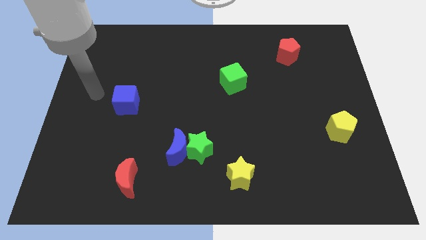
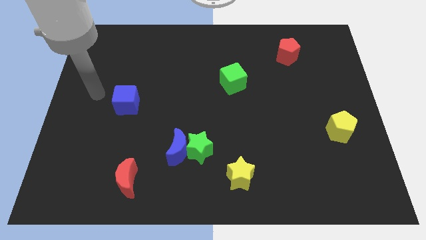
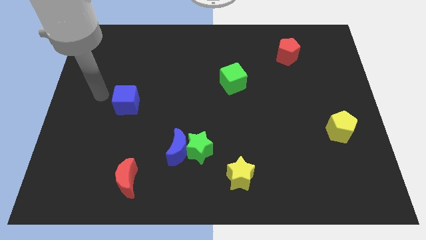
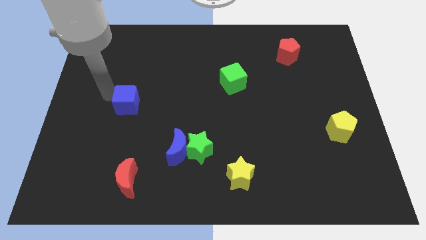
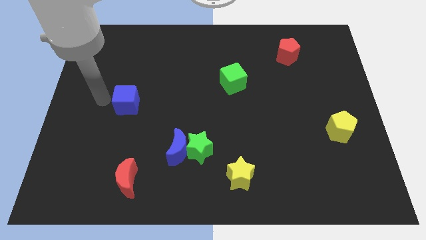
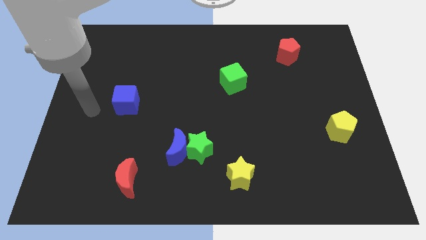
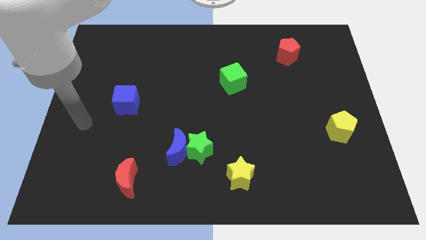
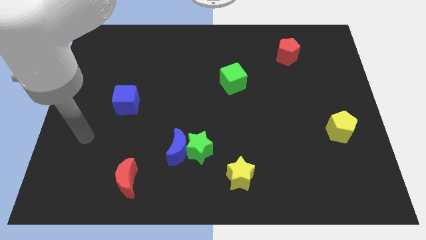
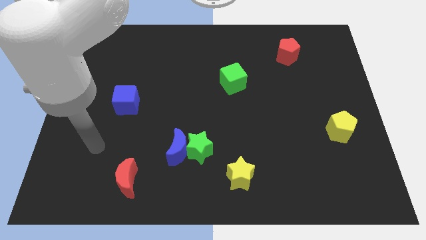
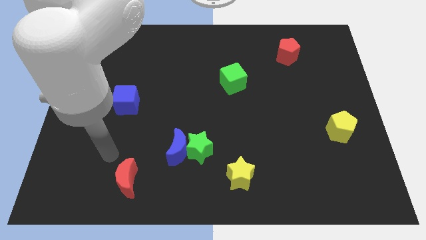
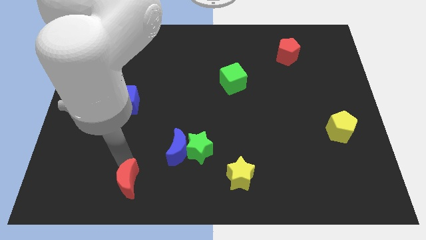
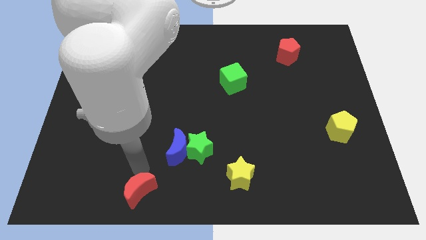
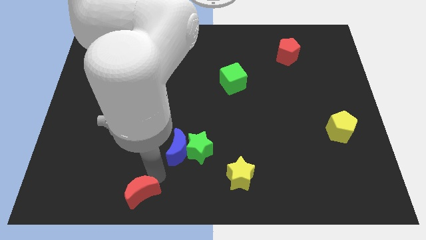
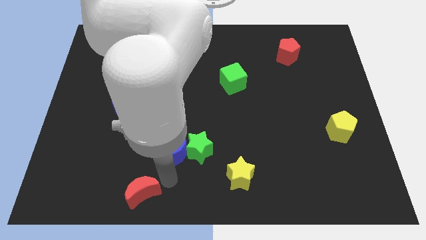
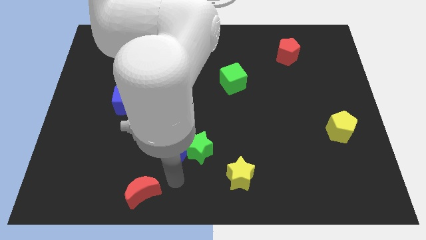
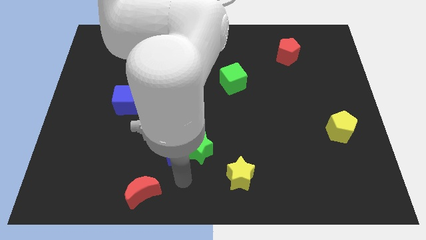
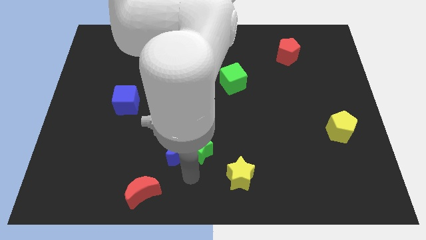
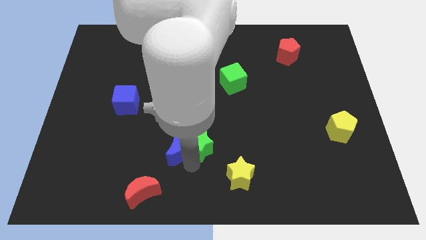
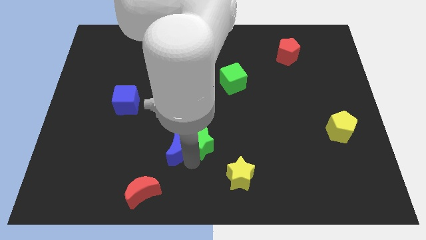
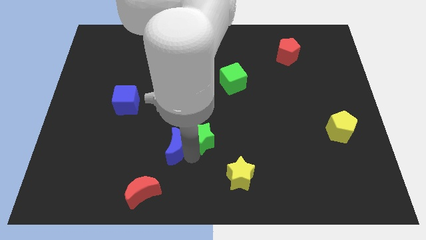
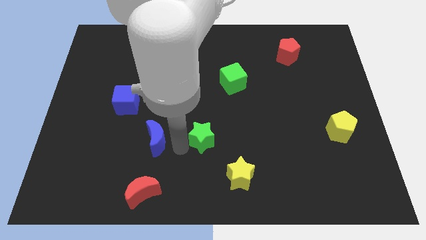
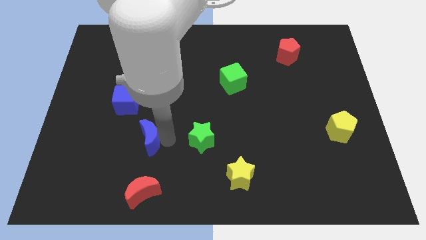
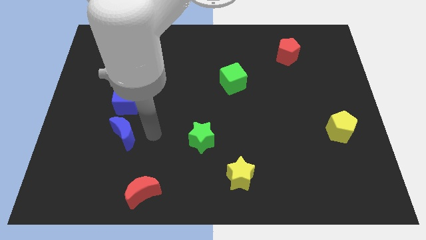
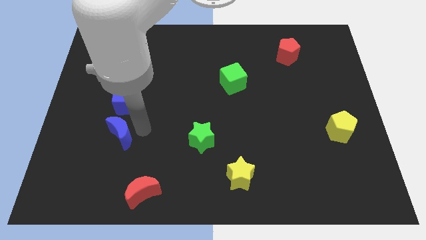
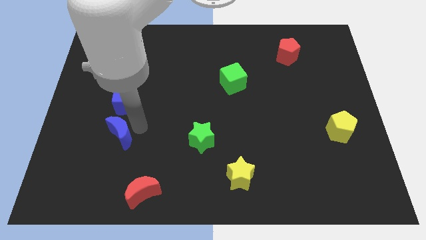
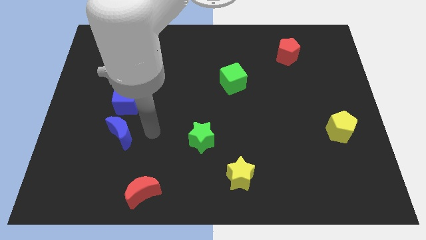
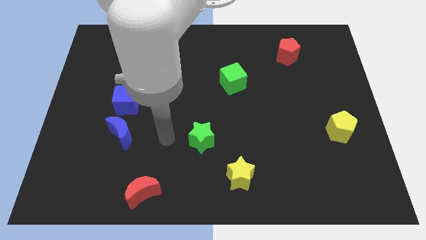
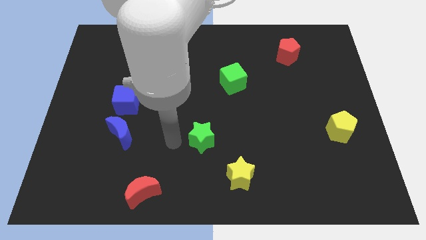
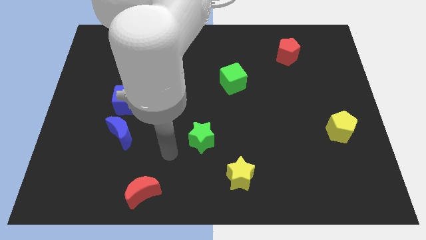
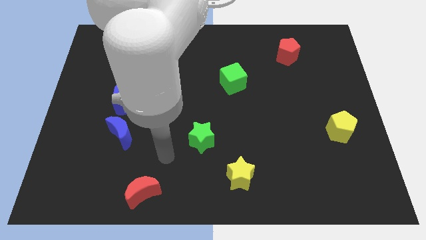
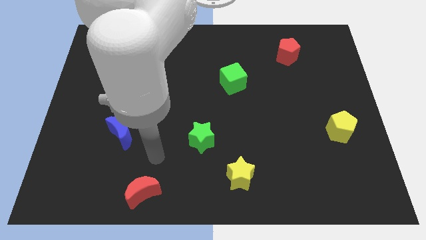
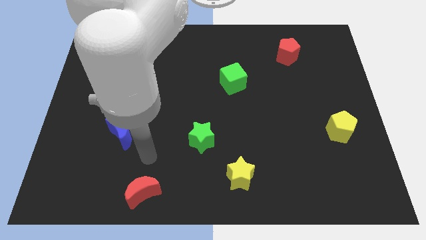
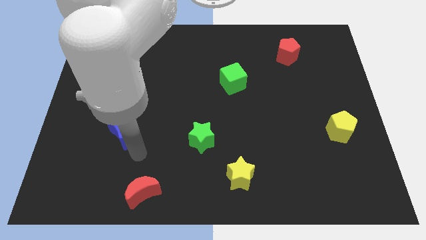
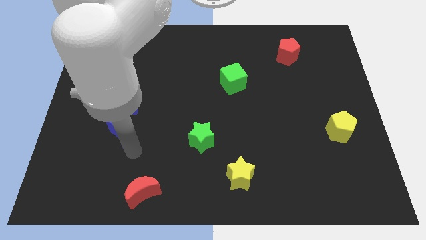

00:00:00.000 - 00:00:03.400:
separate the blue crescent from the green star

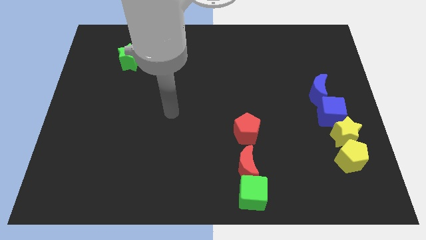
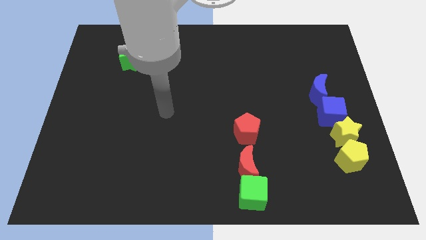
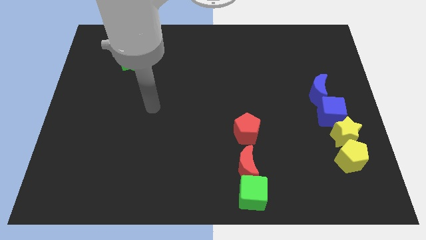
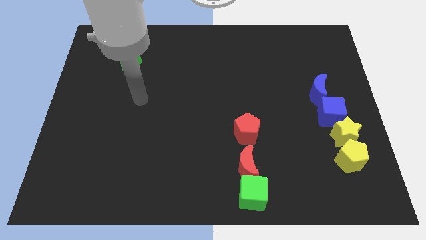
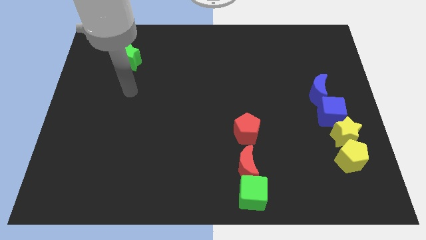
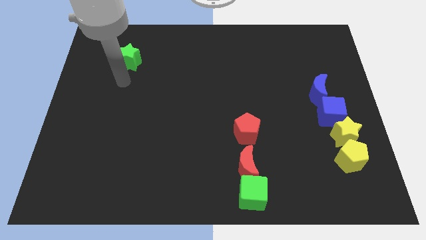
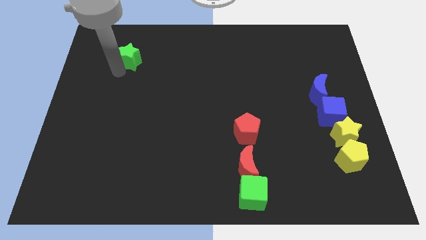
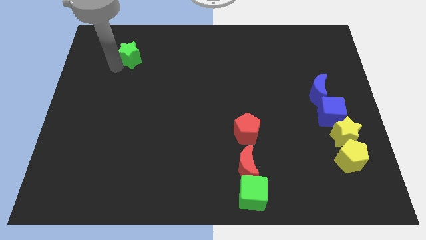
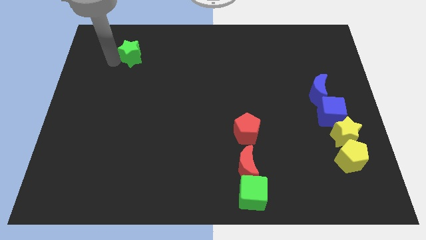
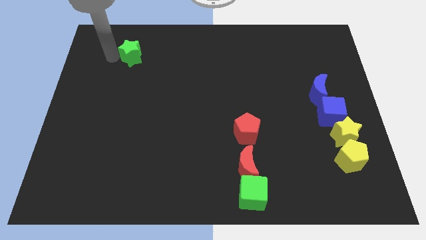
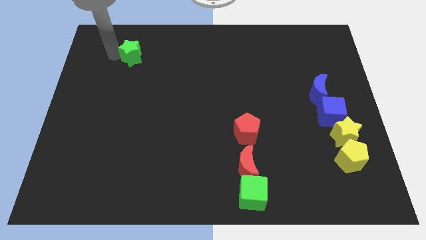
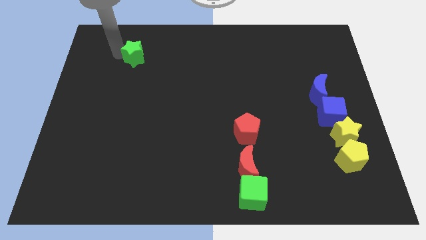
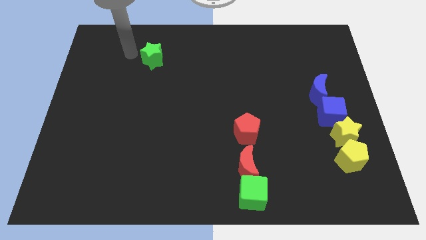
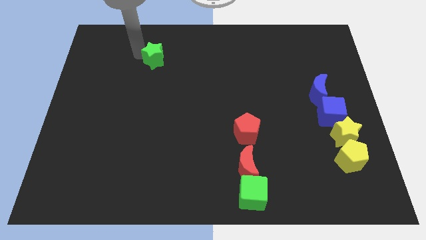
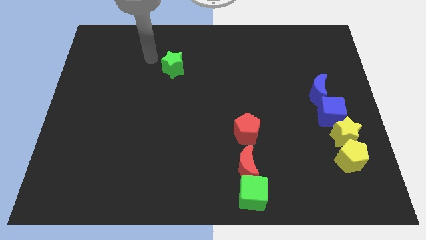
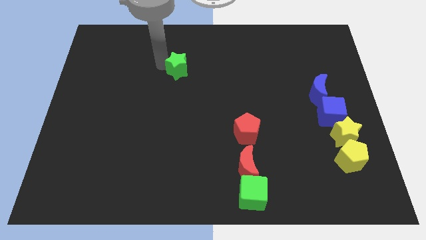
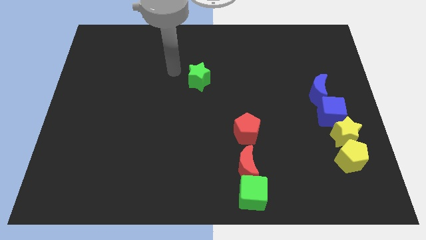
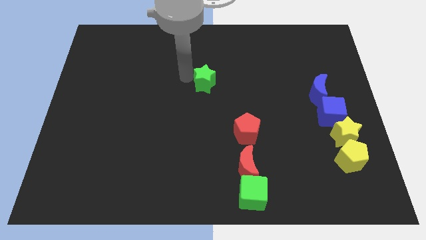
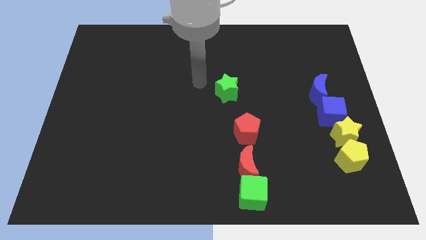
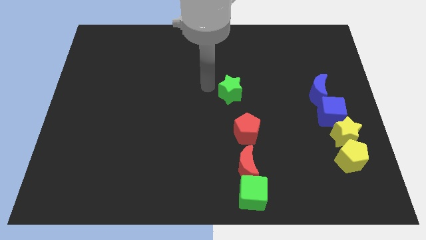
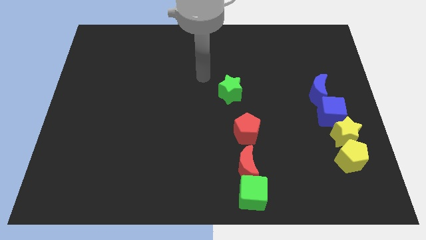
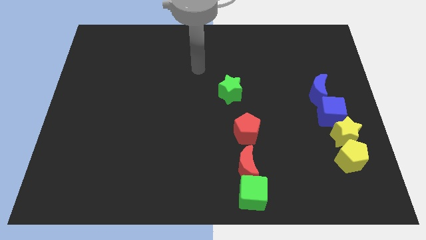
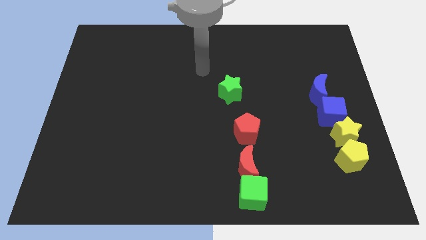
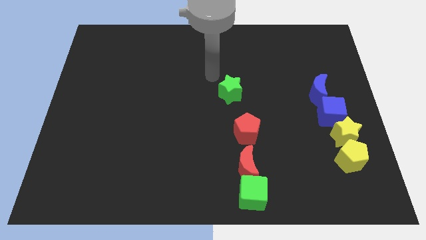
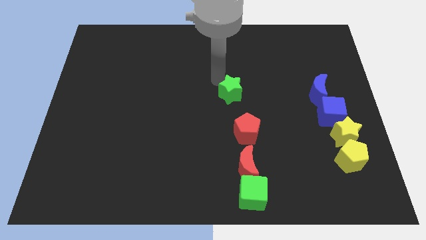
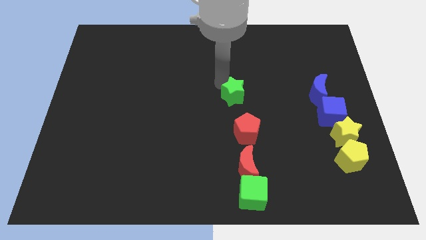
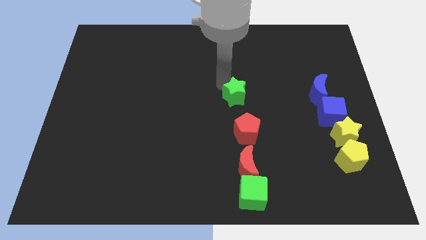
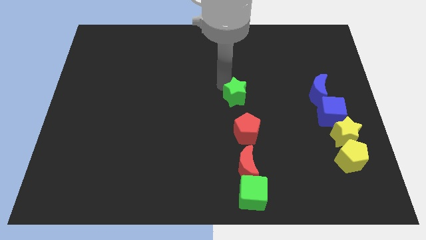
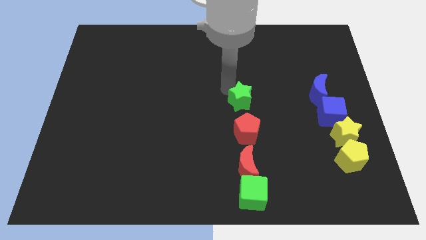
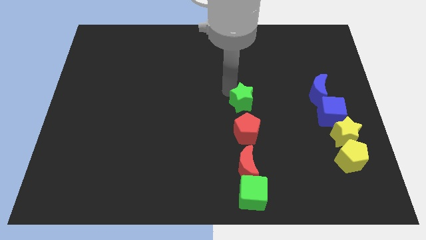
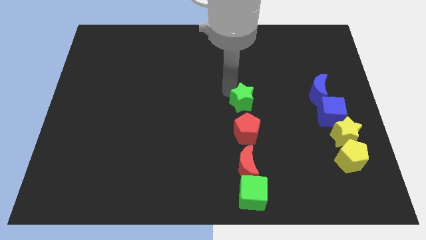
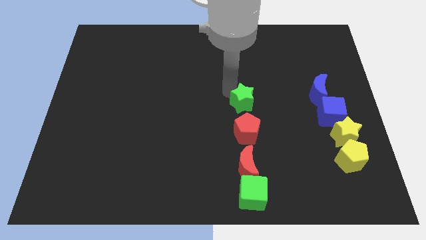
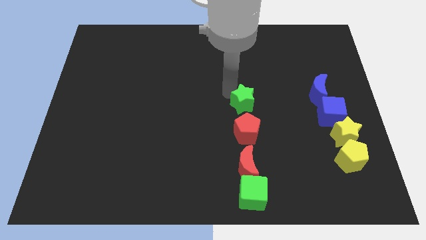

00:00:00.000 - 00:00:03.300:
place the green star left to the blue moon

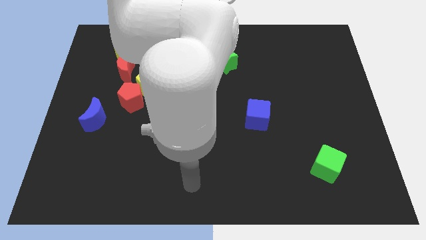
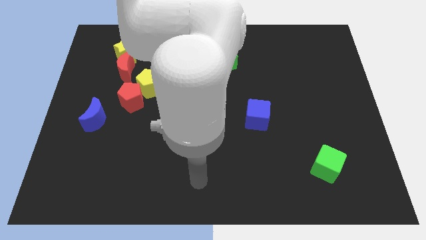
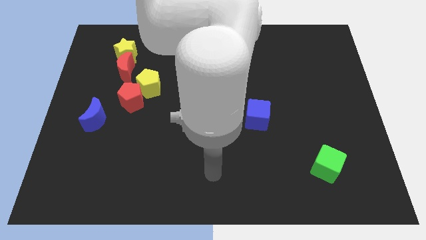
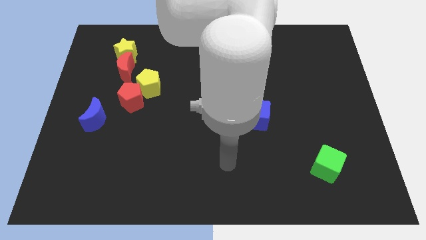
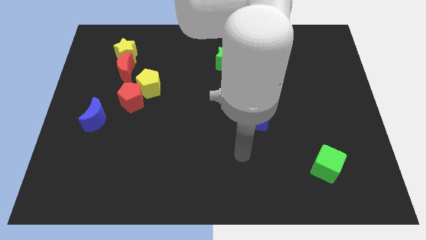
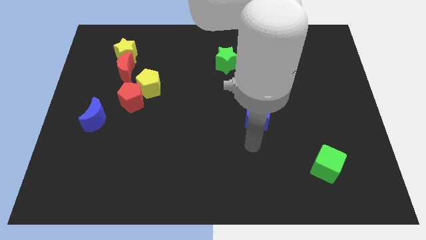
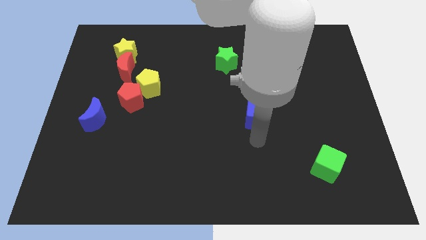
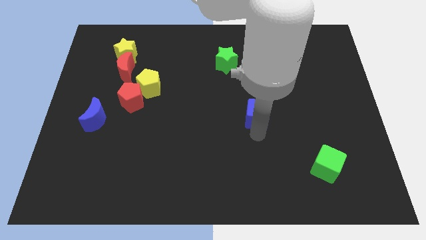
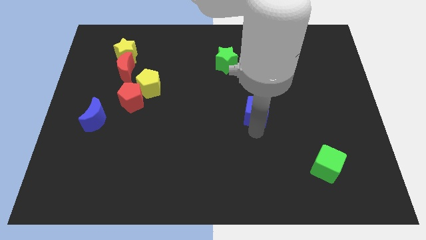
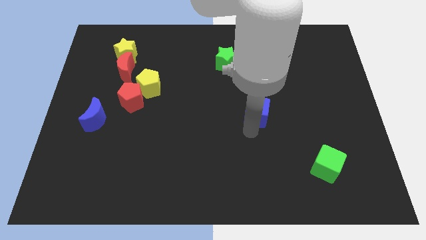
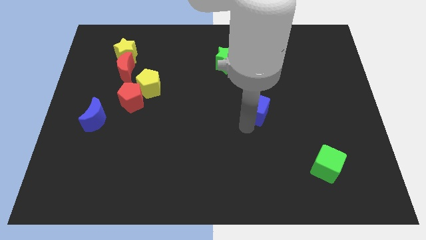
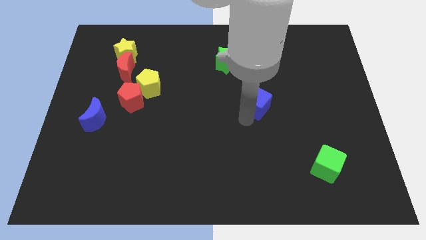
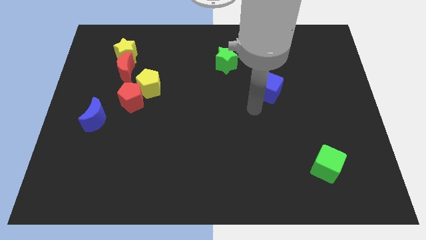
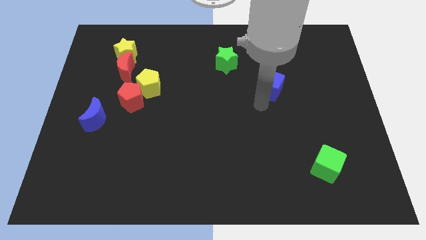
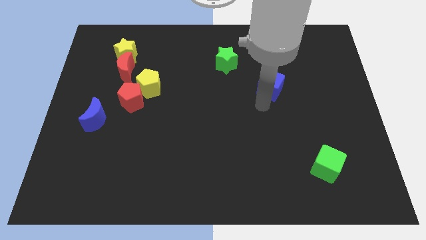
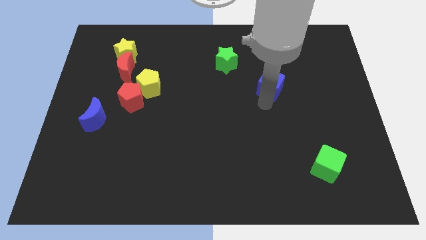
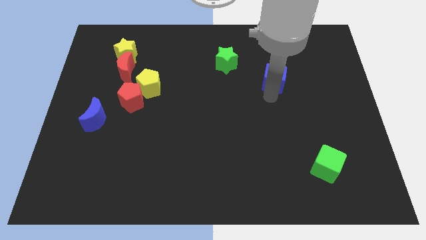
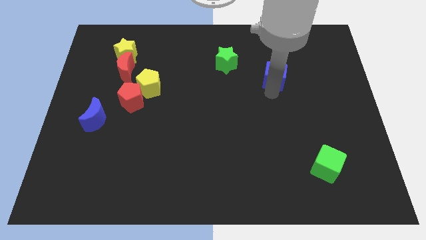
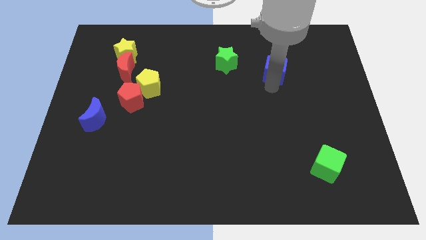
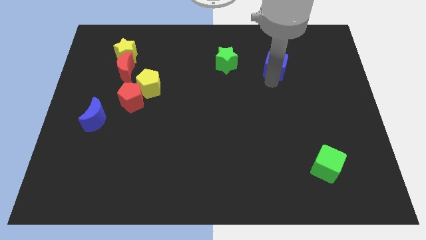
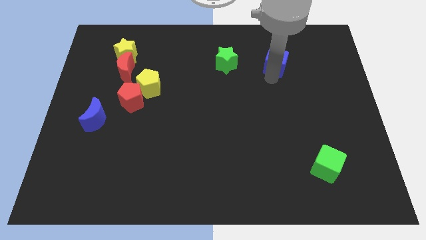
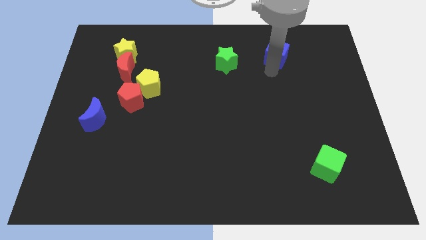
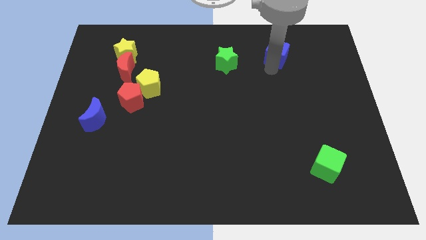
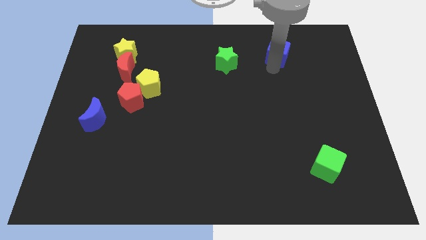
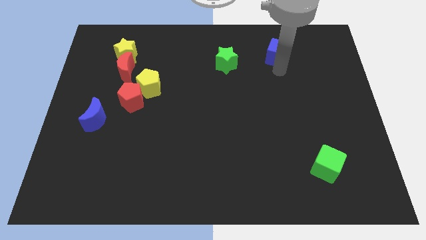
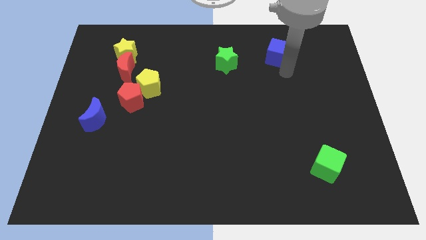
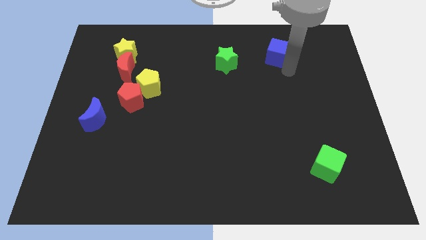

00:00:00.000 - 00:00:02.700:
place the blue cube to the center of the board
